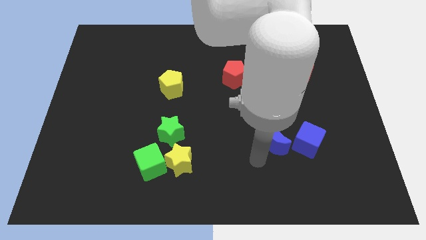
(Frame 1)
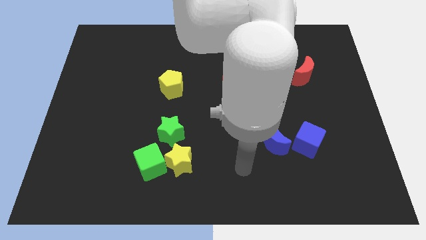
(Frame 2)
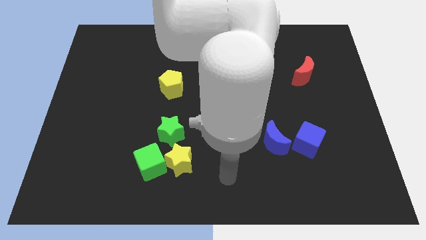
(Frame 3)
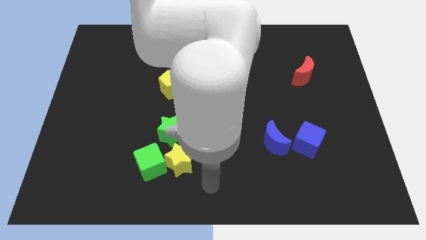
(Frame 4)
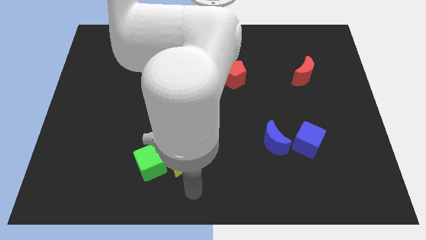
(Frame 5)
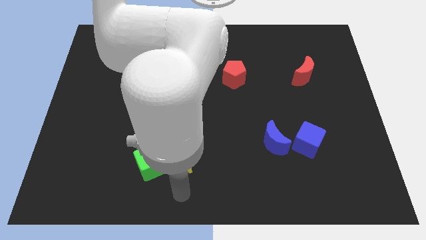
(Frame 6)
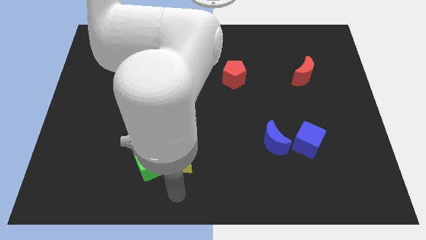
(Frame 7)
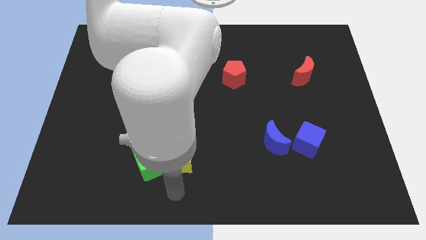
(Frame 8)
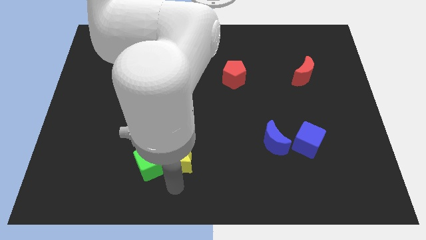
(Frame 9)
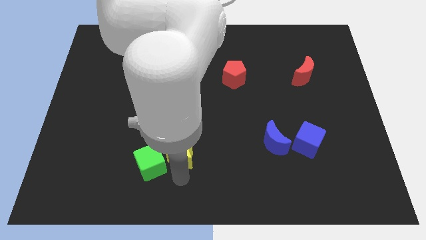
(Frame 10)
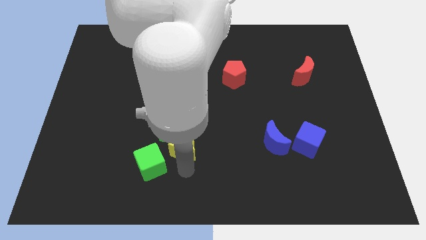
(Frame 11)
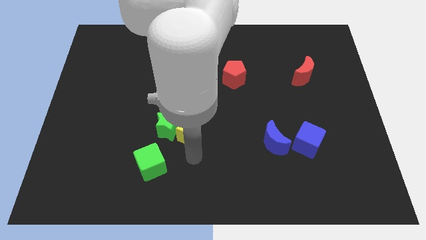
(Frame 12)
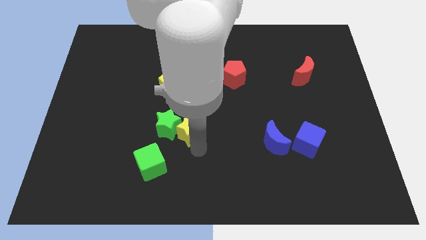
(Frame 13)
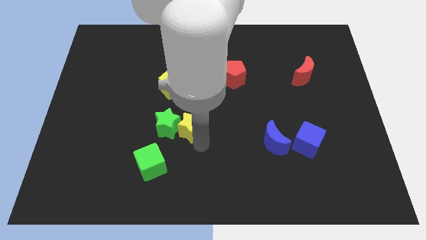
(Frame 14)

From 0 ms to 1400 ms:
put the yellow star parallel right to the green star

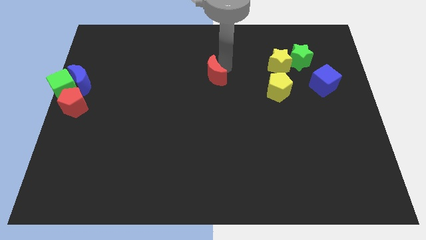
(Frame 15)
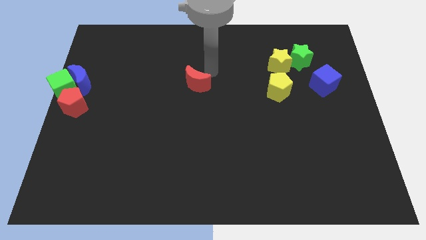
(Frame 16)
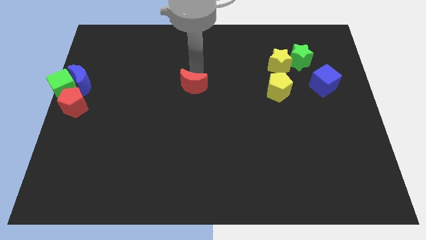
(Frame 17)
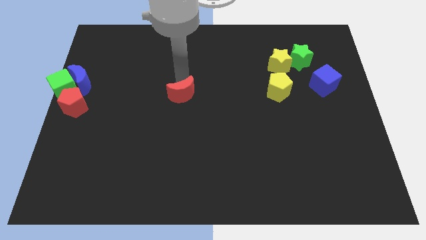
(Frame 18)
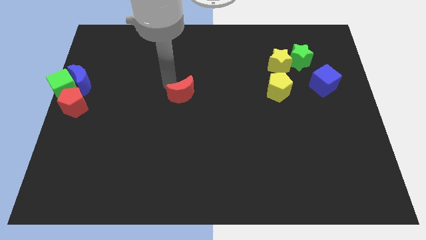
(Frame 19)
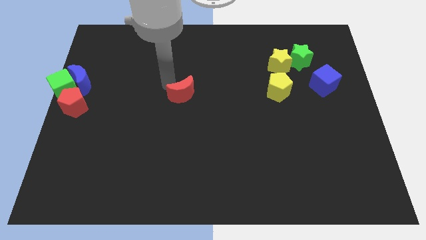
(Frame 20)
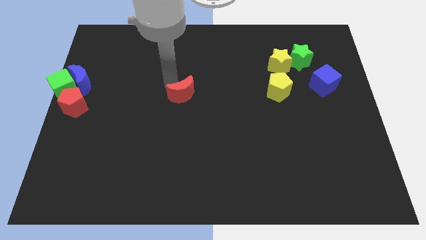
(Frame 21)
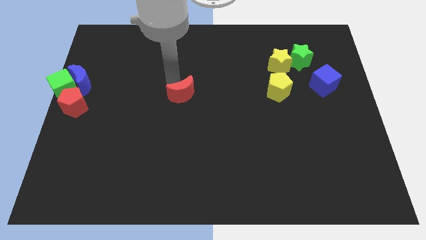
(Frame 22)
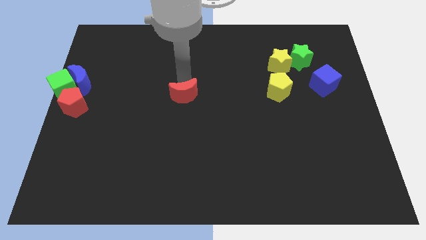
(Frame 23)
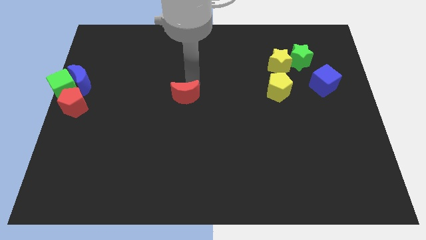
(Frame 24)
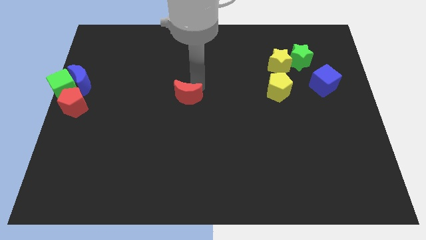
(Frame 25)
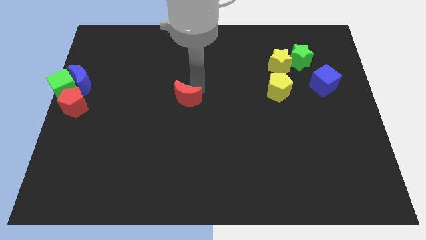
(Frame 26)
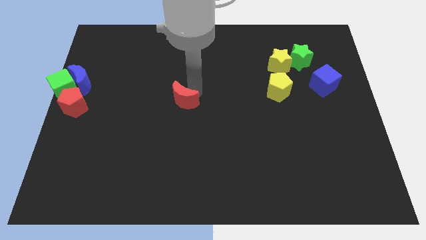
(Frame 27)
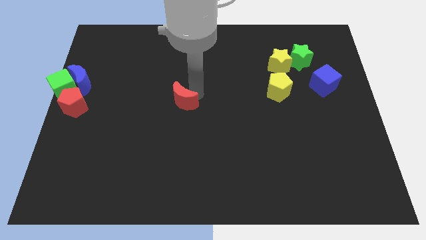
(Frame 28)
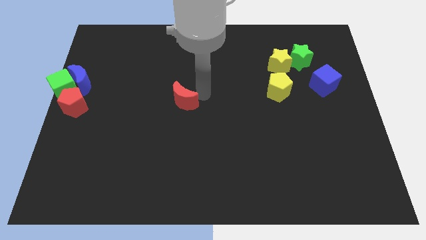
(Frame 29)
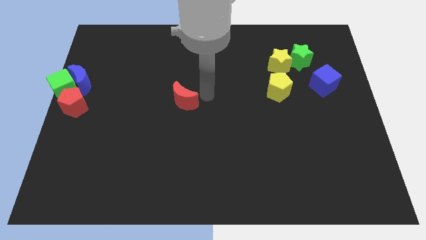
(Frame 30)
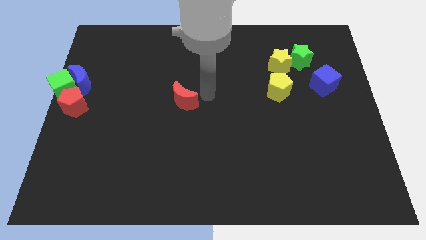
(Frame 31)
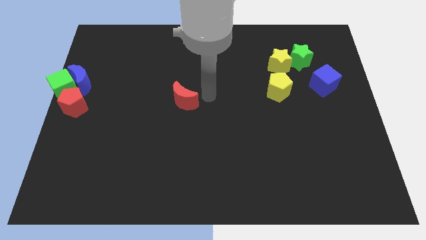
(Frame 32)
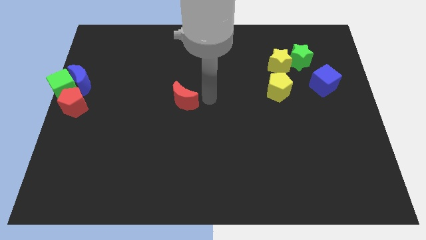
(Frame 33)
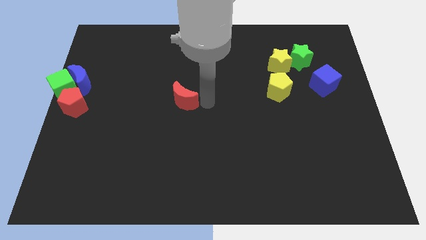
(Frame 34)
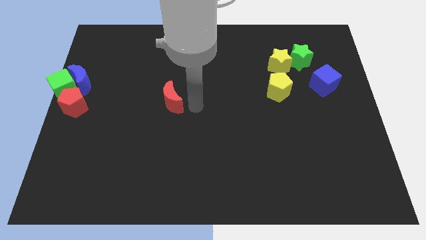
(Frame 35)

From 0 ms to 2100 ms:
move the red moon slightly down

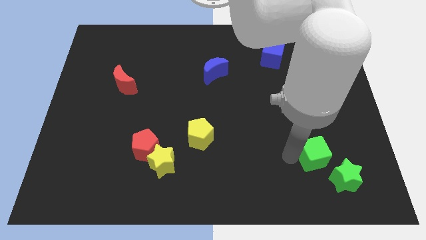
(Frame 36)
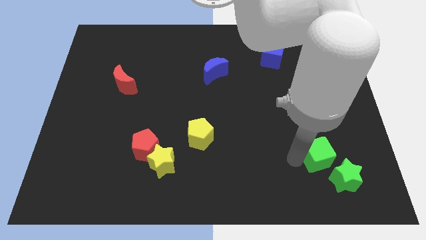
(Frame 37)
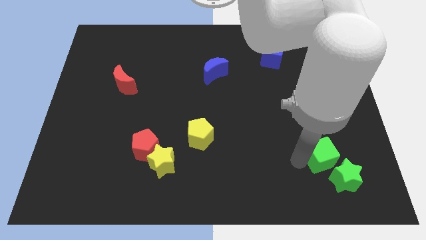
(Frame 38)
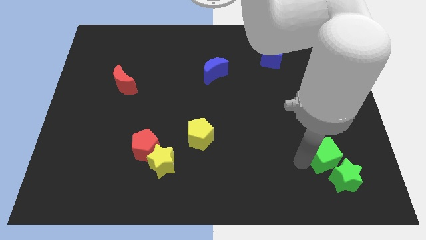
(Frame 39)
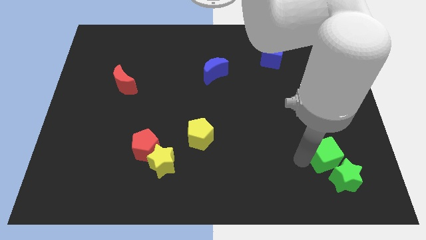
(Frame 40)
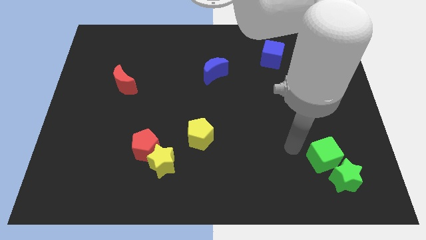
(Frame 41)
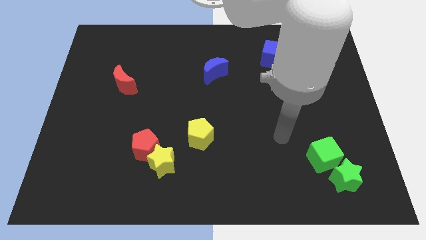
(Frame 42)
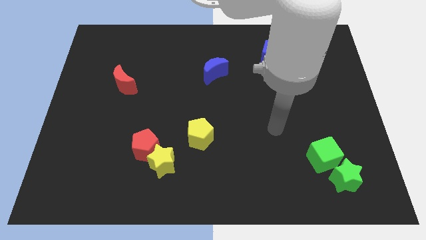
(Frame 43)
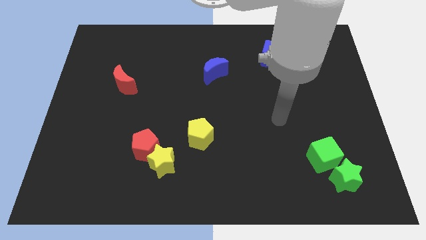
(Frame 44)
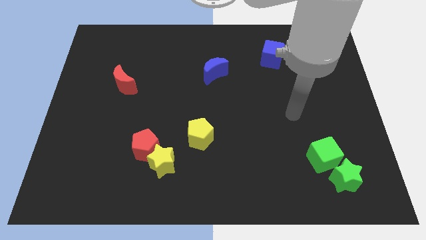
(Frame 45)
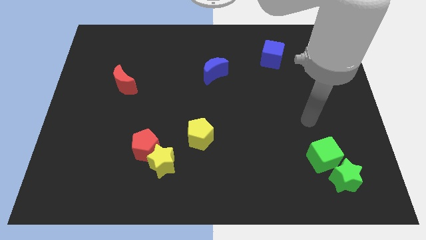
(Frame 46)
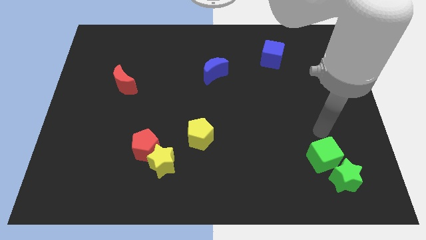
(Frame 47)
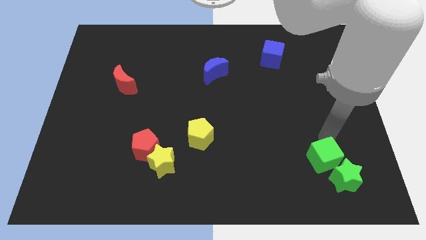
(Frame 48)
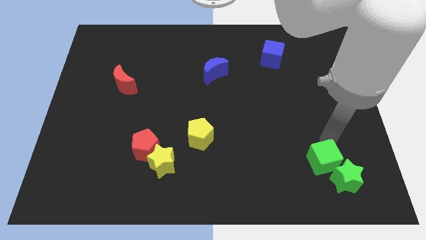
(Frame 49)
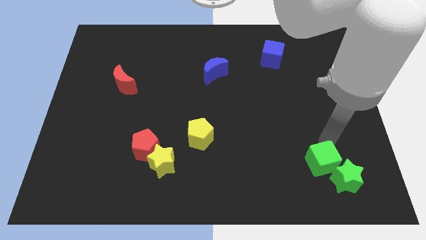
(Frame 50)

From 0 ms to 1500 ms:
attach the green cube to the green star

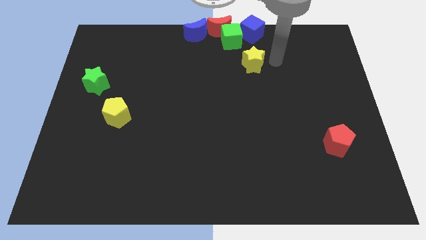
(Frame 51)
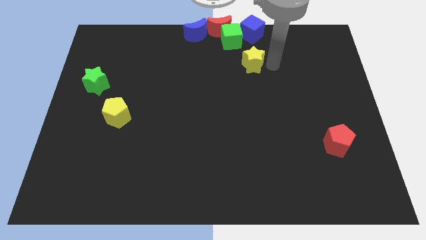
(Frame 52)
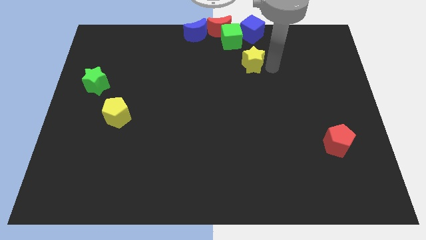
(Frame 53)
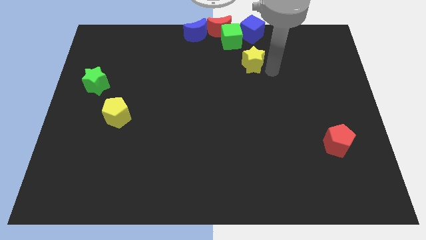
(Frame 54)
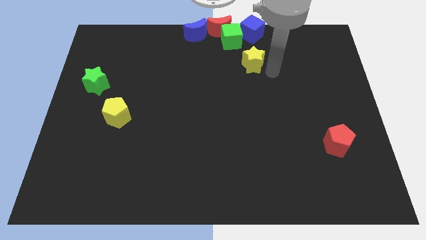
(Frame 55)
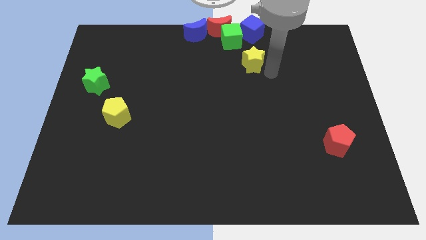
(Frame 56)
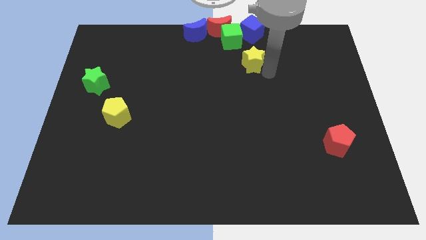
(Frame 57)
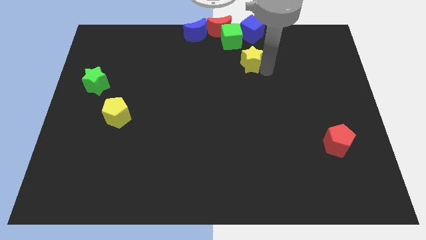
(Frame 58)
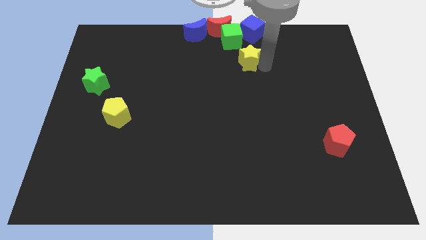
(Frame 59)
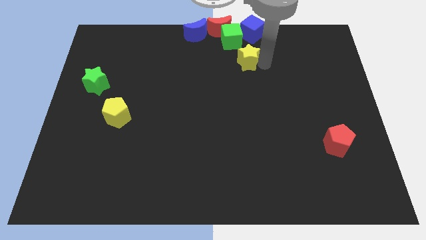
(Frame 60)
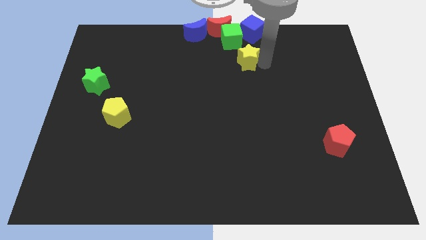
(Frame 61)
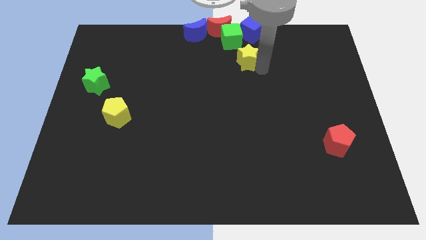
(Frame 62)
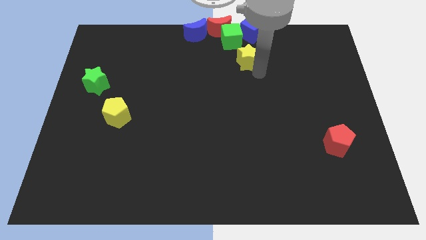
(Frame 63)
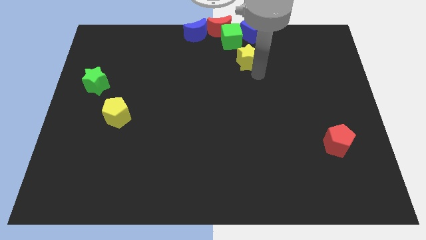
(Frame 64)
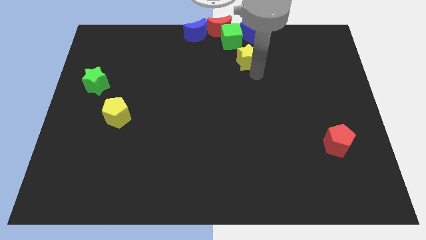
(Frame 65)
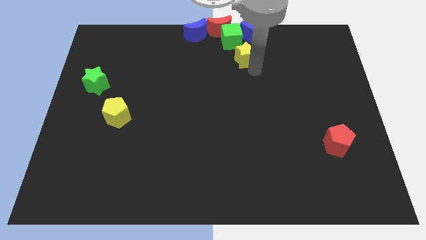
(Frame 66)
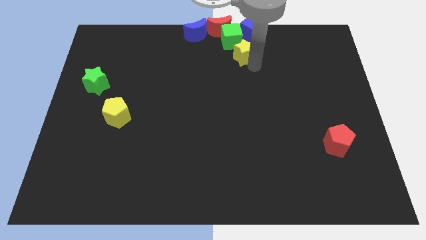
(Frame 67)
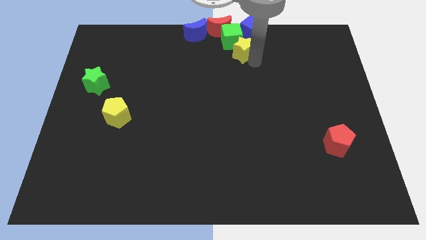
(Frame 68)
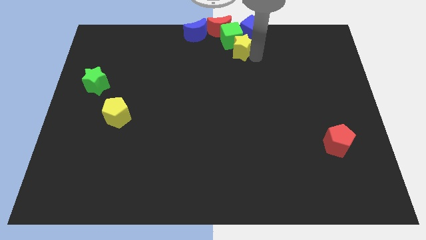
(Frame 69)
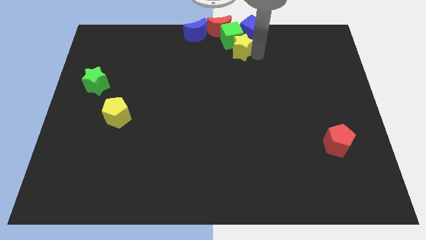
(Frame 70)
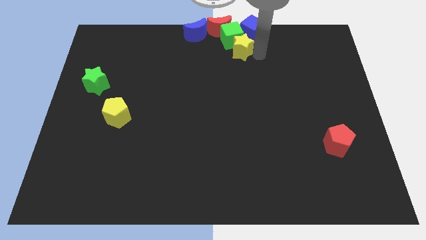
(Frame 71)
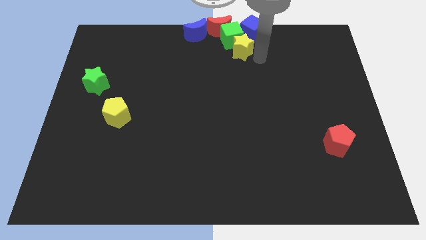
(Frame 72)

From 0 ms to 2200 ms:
push the yellow star into the green cube

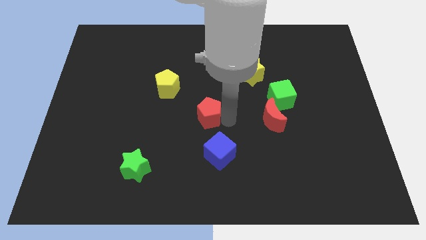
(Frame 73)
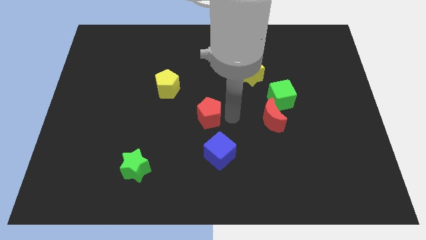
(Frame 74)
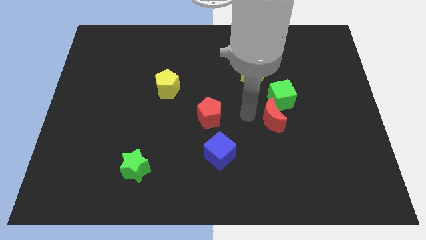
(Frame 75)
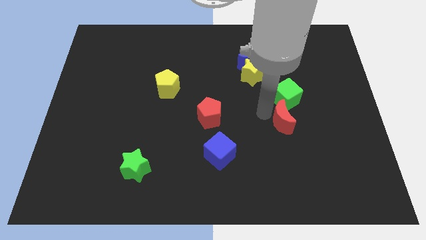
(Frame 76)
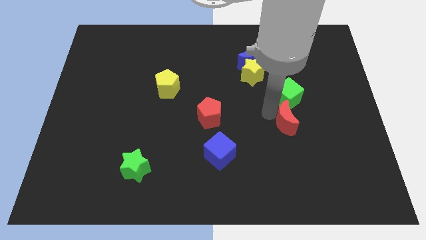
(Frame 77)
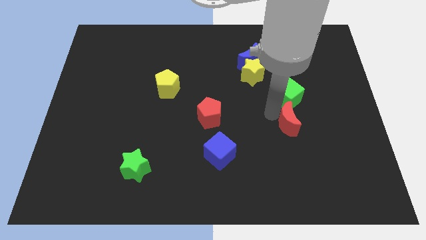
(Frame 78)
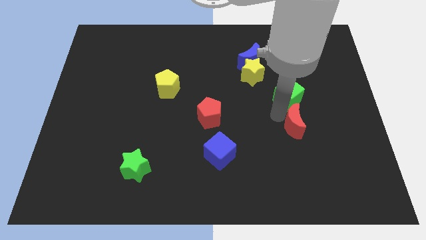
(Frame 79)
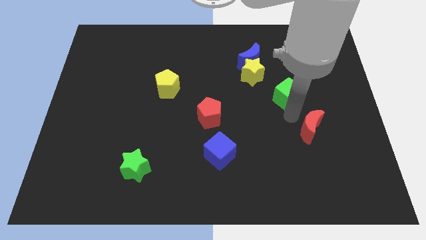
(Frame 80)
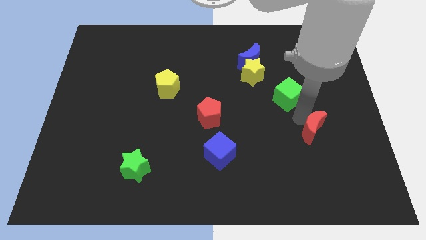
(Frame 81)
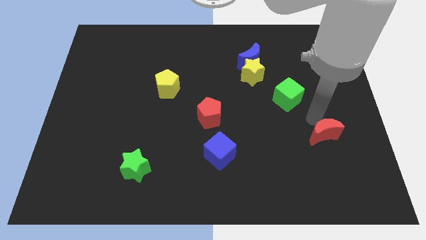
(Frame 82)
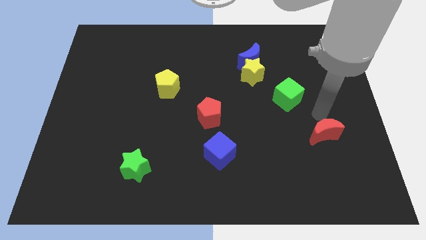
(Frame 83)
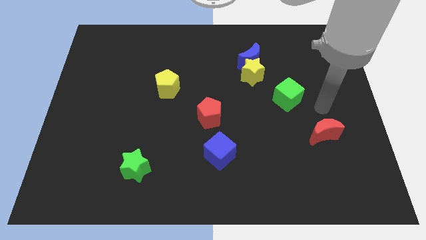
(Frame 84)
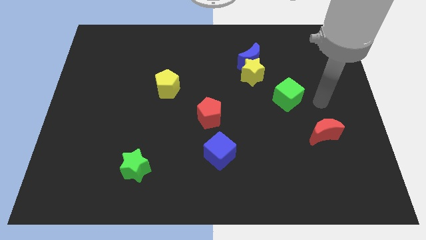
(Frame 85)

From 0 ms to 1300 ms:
drag red moon towards right side of the board

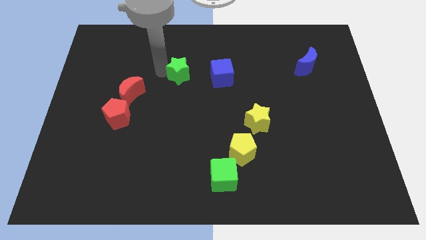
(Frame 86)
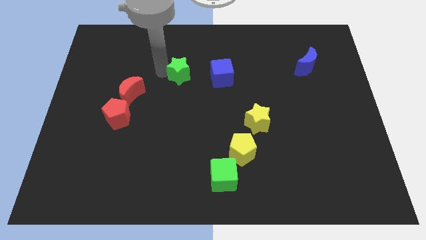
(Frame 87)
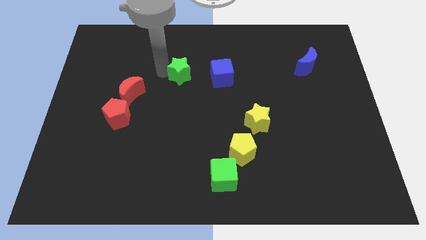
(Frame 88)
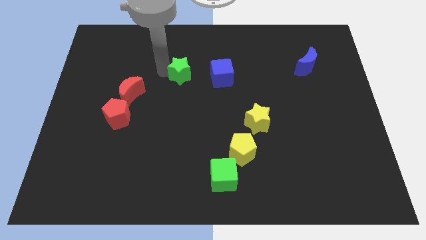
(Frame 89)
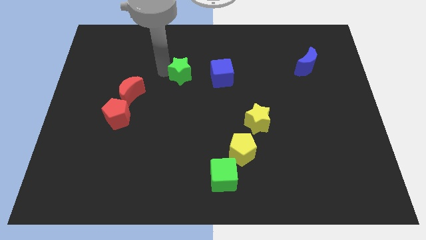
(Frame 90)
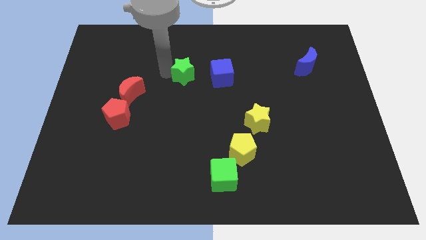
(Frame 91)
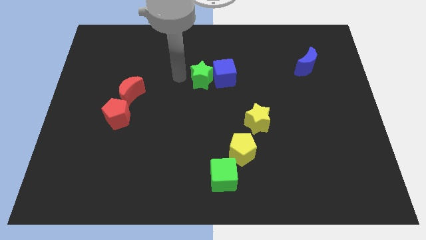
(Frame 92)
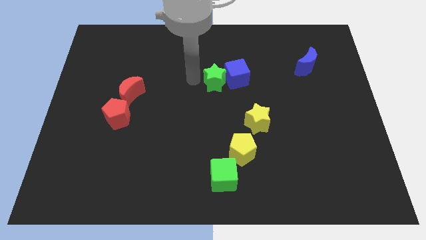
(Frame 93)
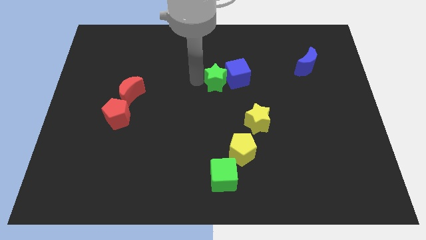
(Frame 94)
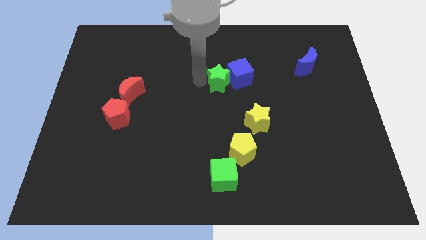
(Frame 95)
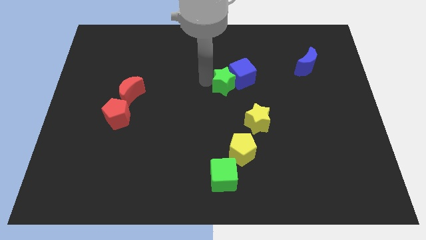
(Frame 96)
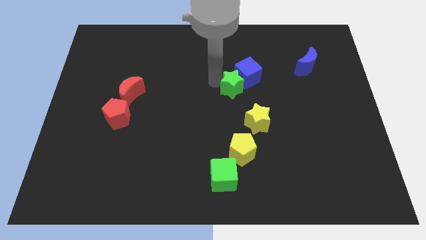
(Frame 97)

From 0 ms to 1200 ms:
push the green star into the blue cube
